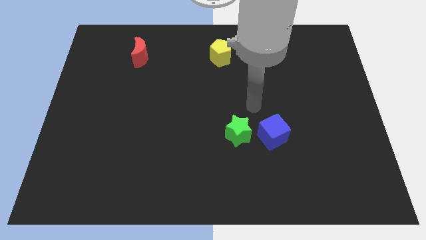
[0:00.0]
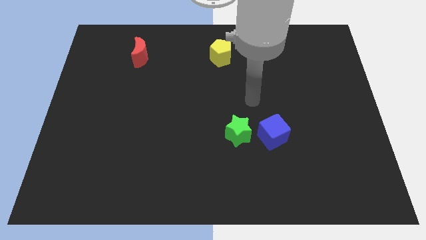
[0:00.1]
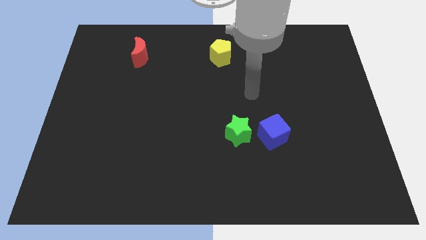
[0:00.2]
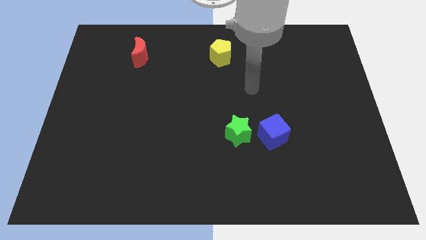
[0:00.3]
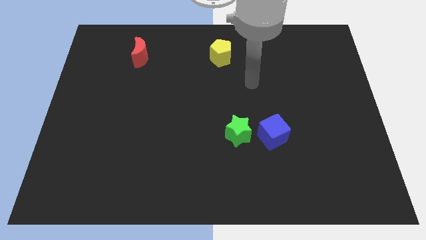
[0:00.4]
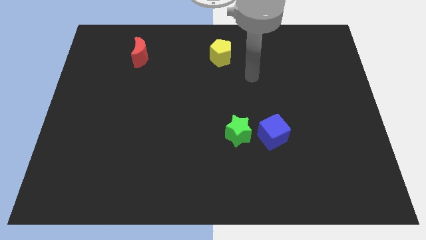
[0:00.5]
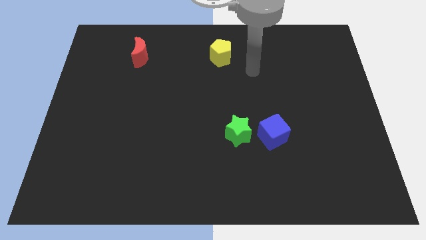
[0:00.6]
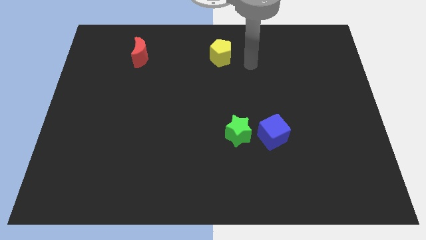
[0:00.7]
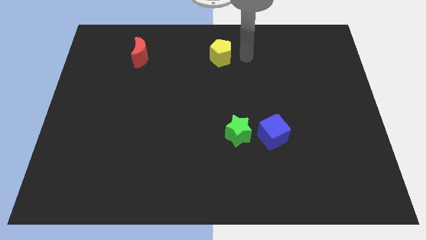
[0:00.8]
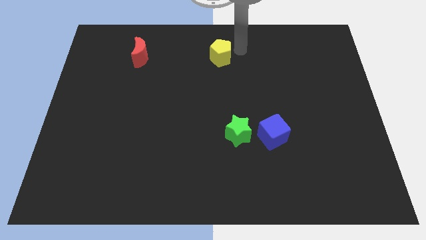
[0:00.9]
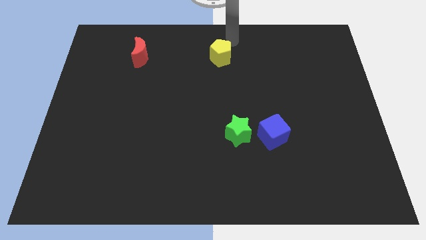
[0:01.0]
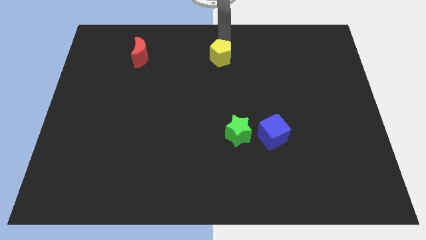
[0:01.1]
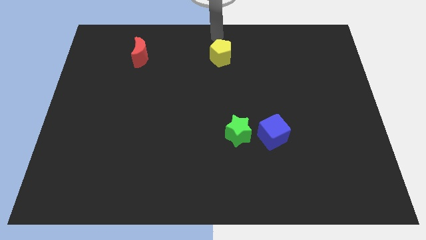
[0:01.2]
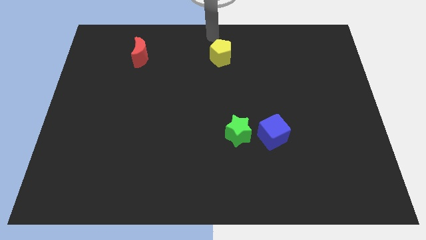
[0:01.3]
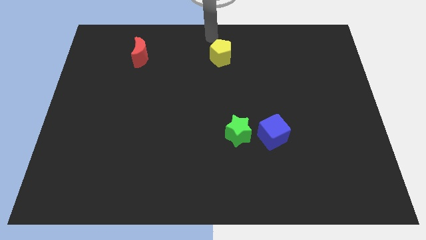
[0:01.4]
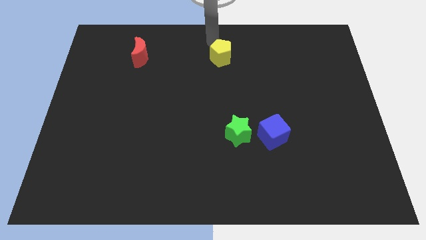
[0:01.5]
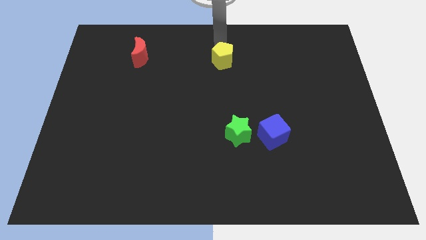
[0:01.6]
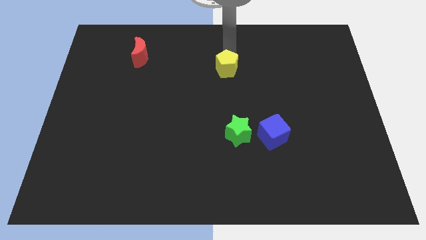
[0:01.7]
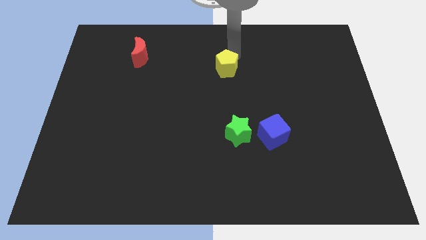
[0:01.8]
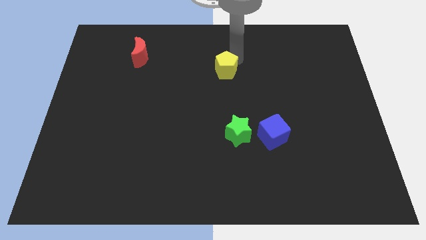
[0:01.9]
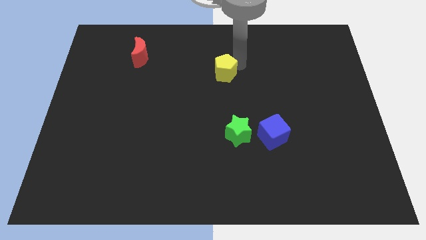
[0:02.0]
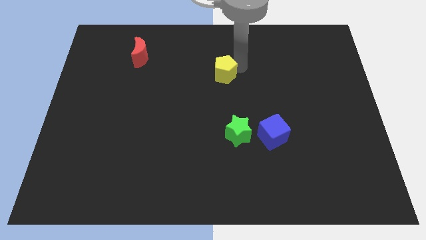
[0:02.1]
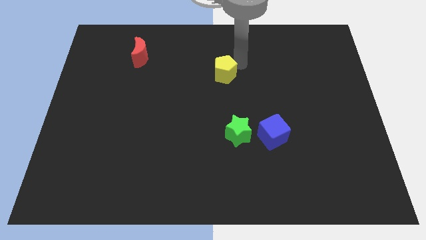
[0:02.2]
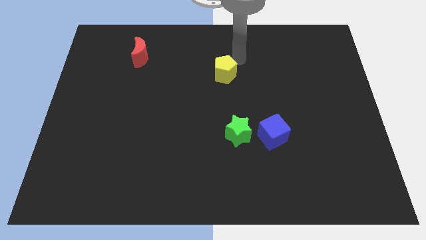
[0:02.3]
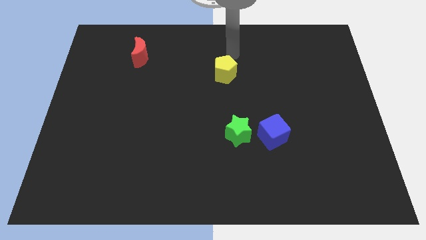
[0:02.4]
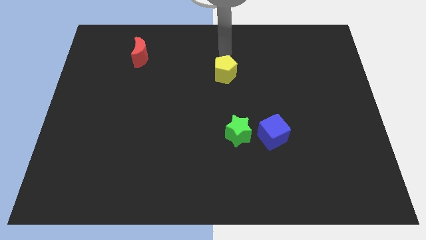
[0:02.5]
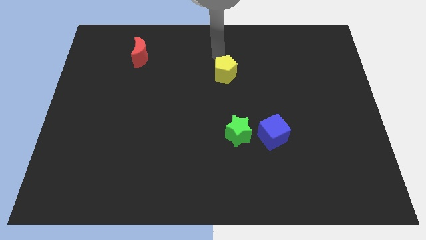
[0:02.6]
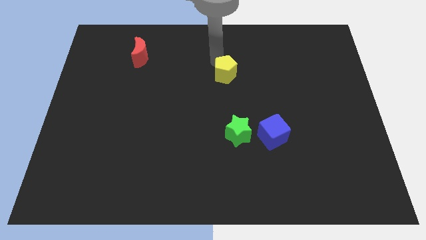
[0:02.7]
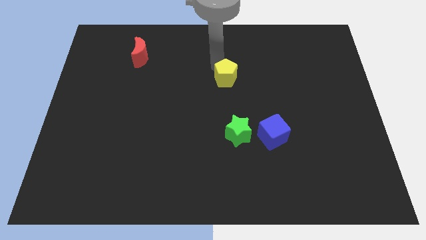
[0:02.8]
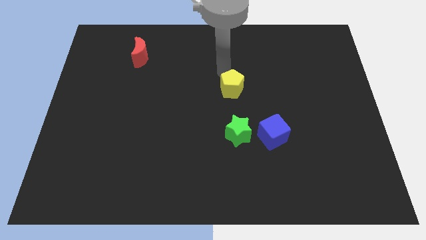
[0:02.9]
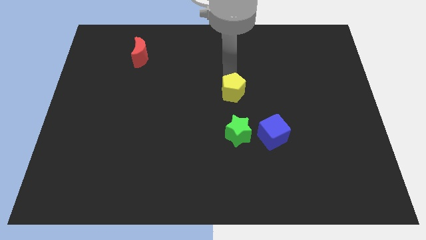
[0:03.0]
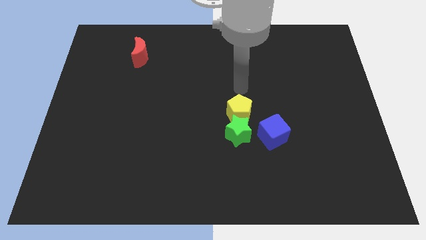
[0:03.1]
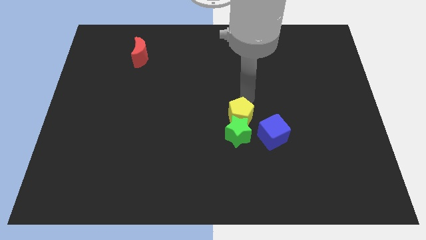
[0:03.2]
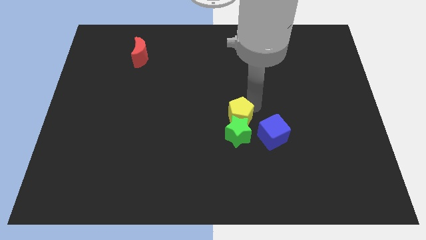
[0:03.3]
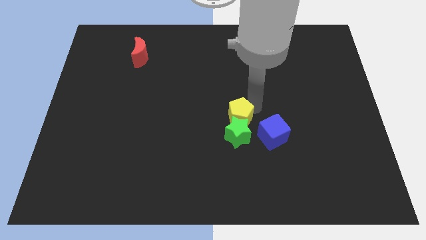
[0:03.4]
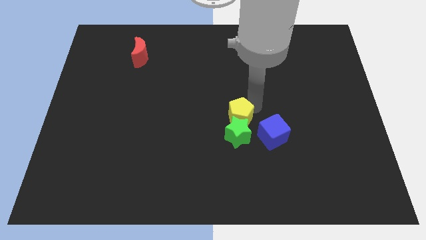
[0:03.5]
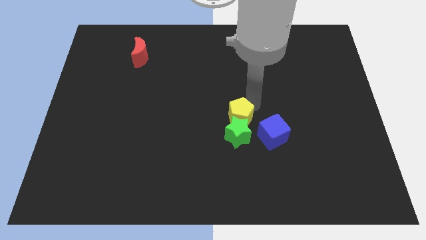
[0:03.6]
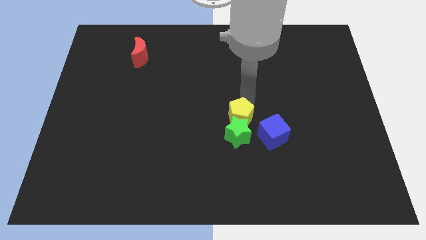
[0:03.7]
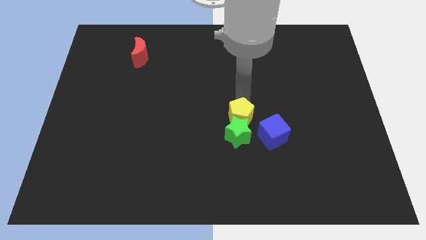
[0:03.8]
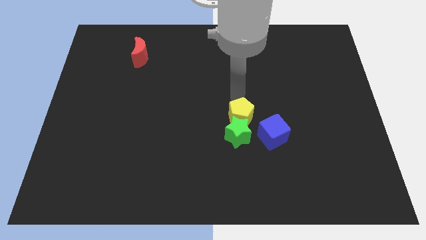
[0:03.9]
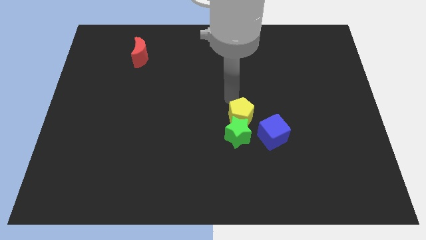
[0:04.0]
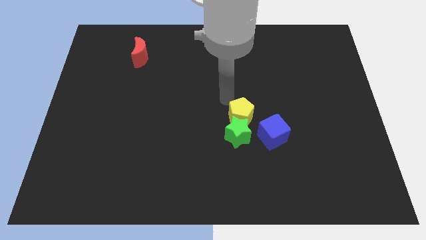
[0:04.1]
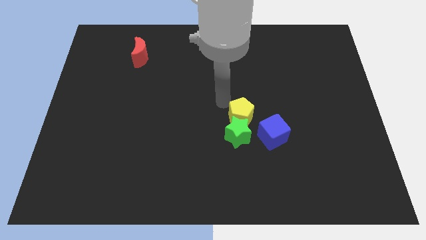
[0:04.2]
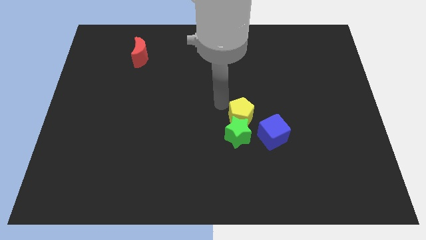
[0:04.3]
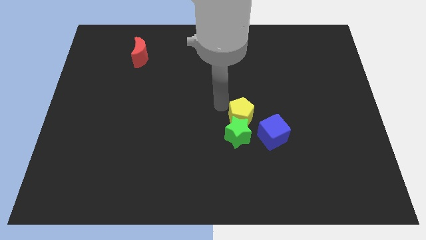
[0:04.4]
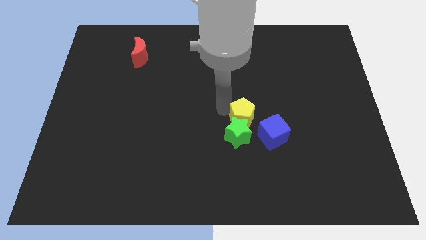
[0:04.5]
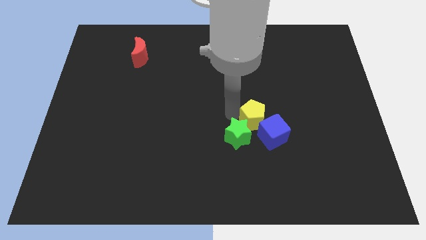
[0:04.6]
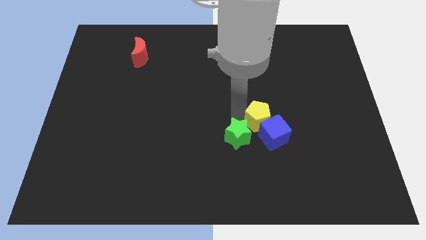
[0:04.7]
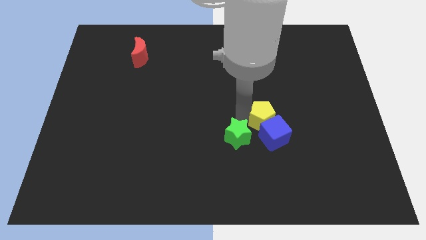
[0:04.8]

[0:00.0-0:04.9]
slide the pentagon towards the cube

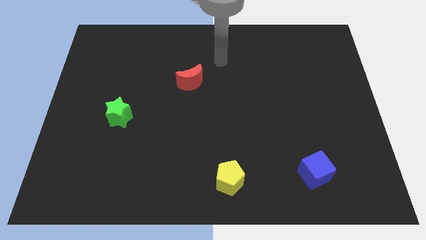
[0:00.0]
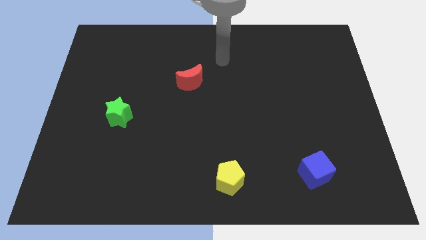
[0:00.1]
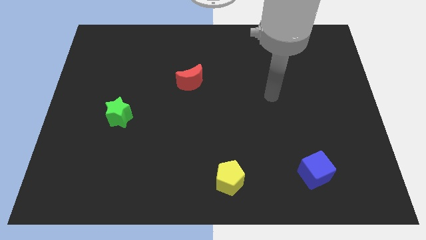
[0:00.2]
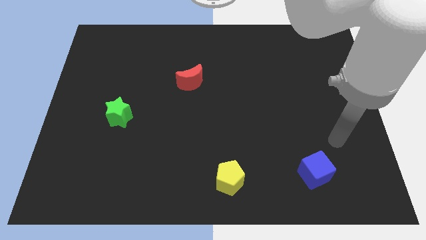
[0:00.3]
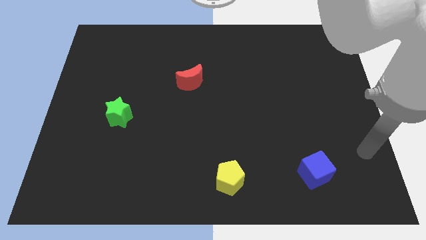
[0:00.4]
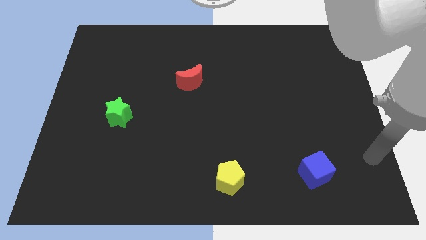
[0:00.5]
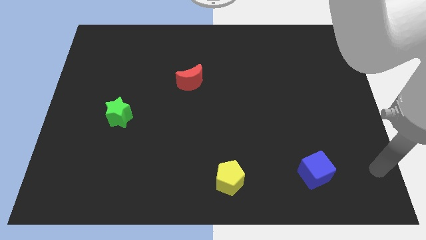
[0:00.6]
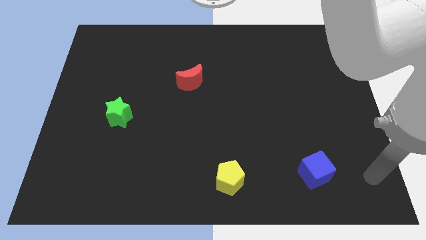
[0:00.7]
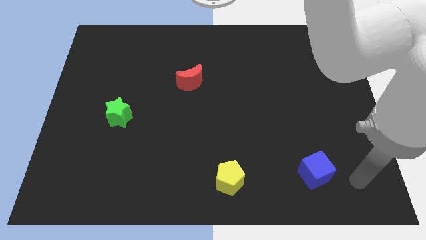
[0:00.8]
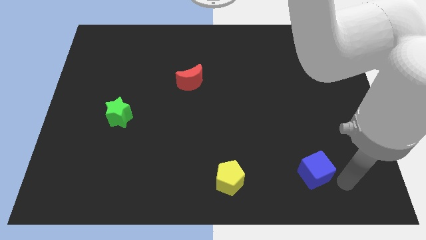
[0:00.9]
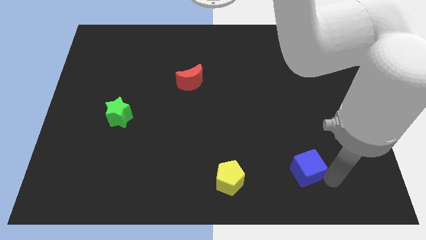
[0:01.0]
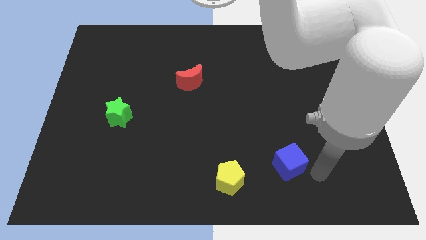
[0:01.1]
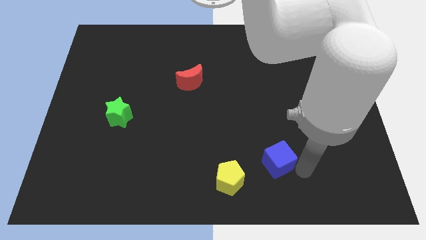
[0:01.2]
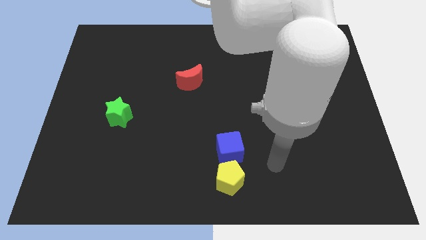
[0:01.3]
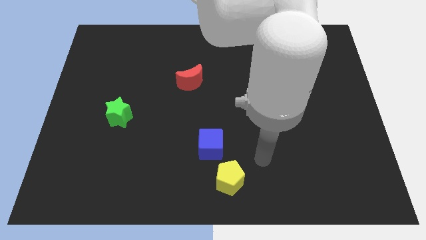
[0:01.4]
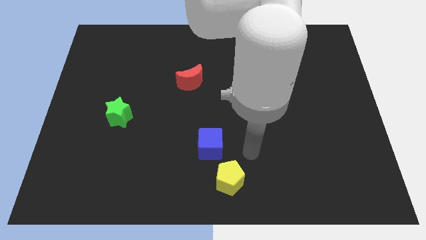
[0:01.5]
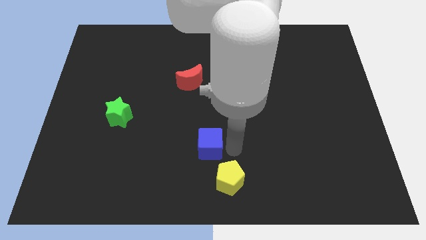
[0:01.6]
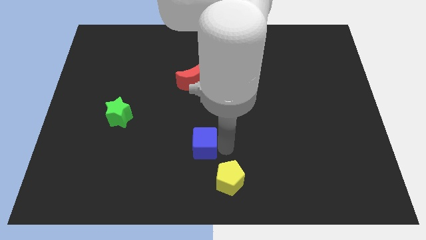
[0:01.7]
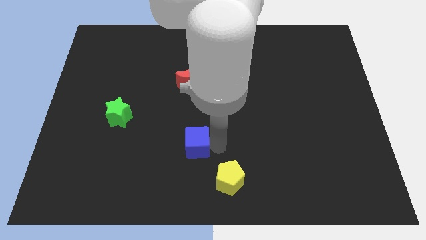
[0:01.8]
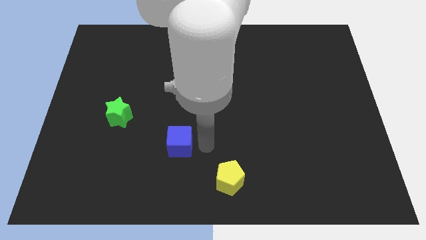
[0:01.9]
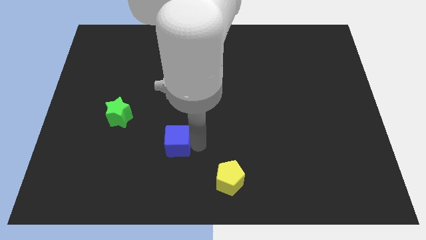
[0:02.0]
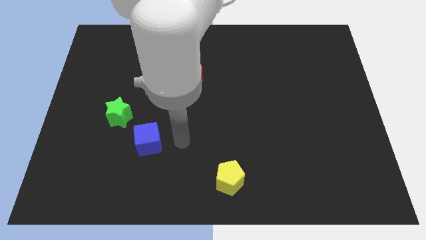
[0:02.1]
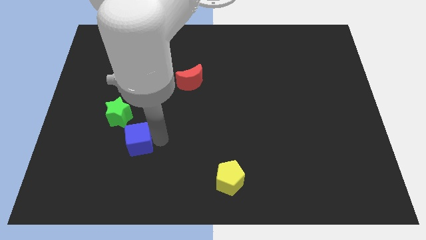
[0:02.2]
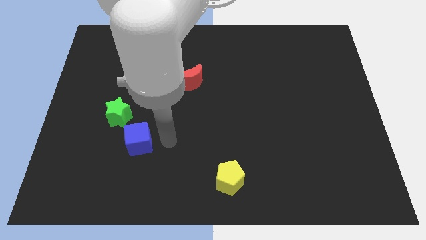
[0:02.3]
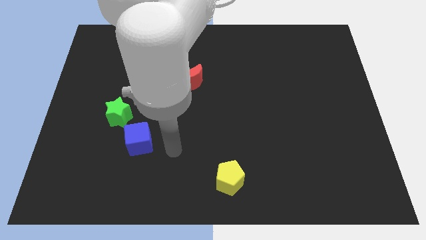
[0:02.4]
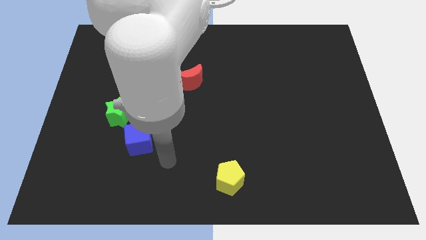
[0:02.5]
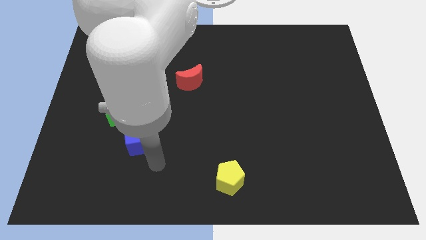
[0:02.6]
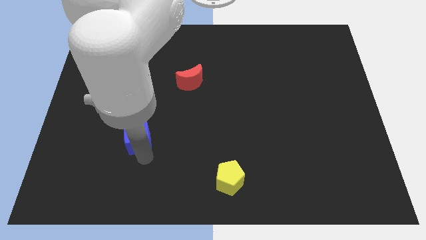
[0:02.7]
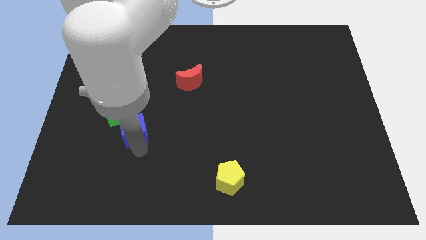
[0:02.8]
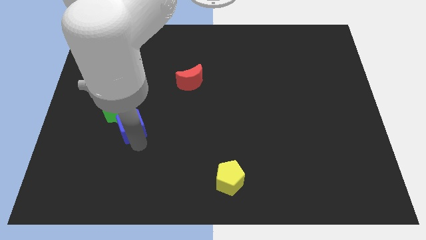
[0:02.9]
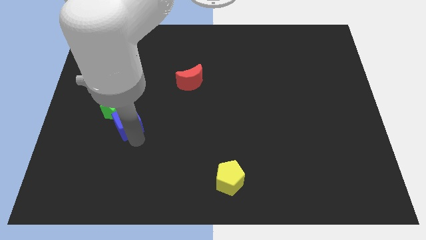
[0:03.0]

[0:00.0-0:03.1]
slide the blue block towards the green block

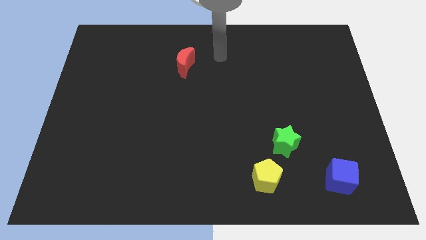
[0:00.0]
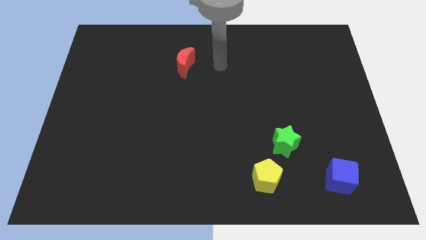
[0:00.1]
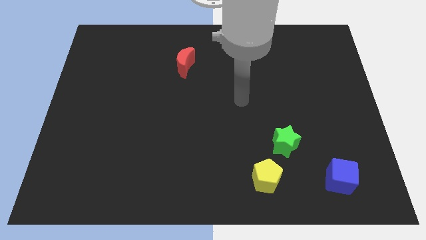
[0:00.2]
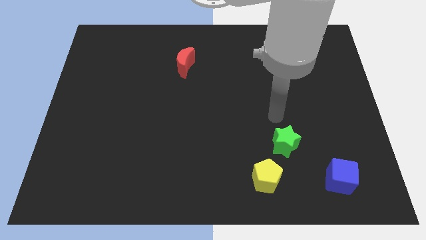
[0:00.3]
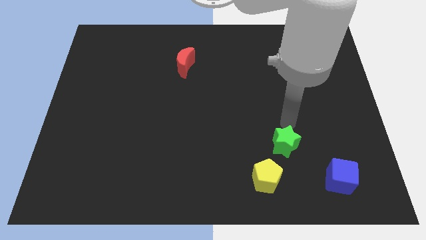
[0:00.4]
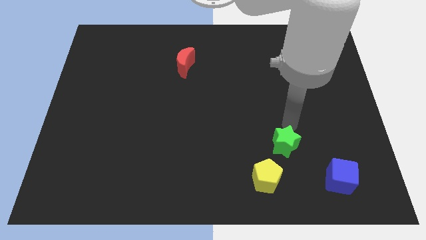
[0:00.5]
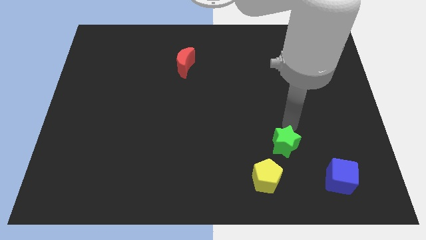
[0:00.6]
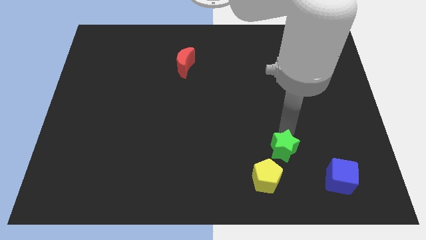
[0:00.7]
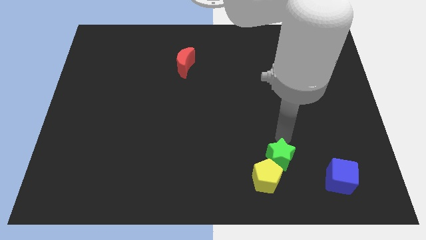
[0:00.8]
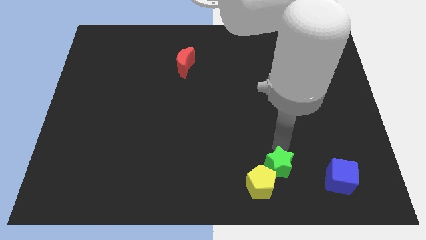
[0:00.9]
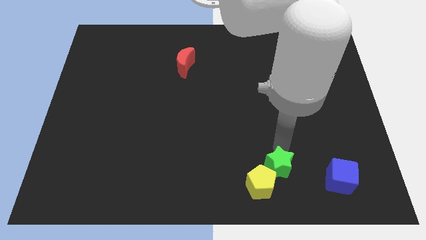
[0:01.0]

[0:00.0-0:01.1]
slide the star to the pentagon
